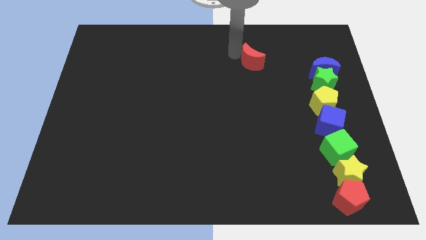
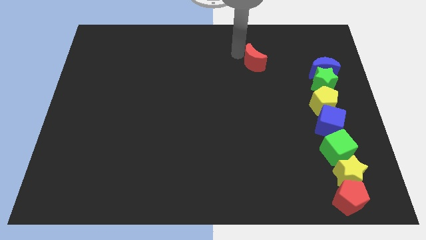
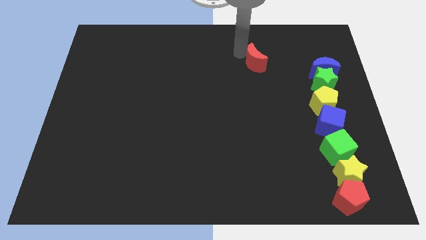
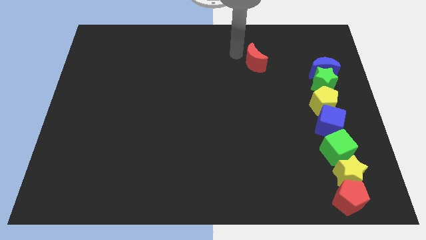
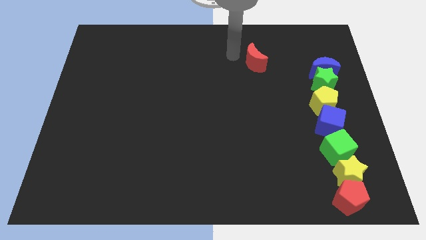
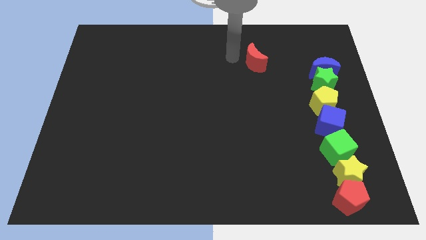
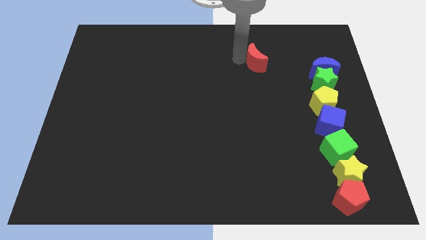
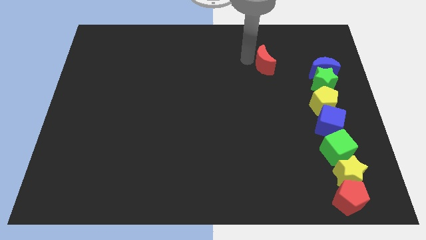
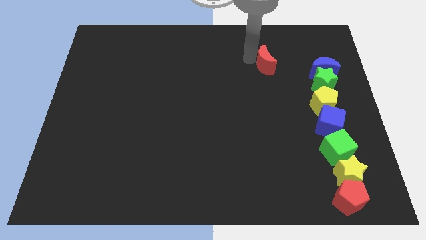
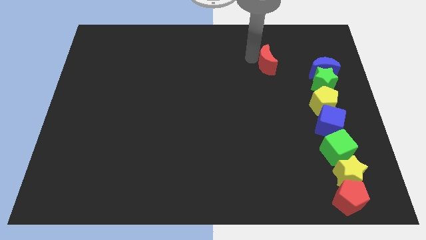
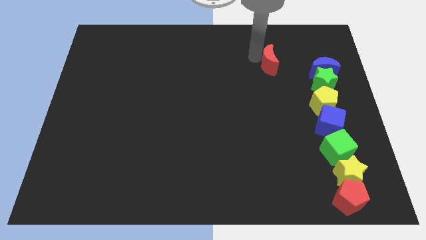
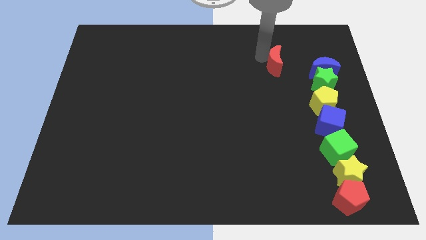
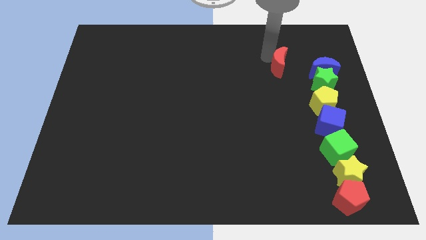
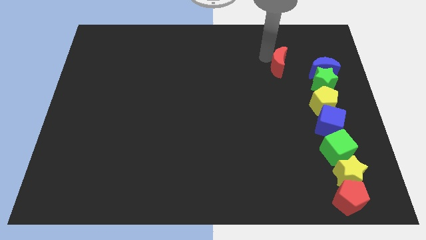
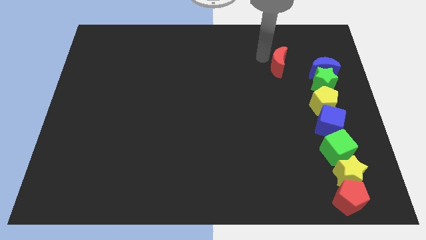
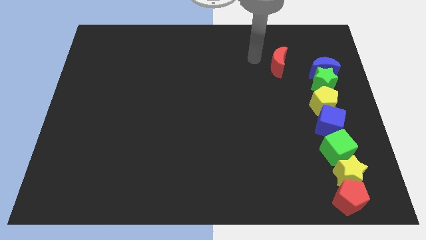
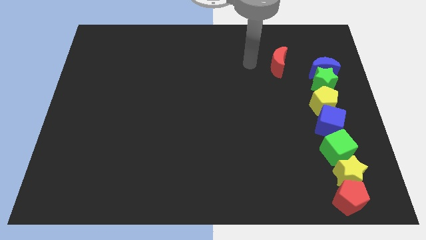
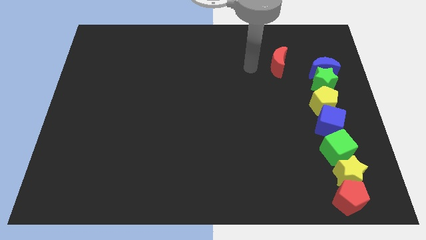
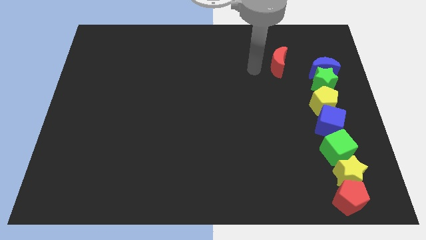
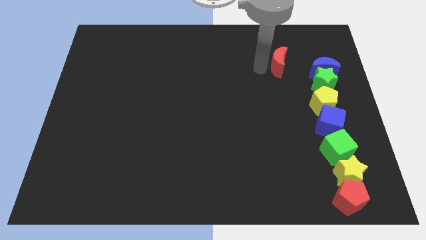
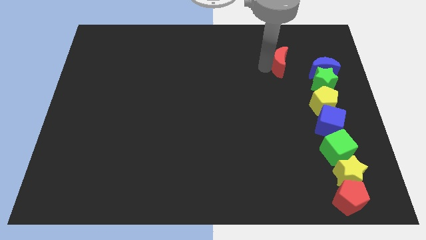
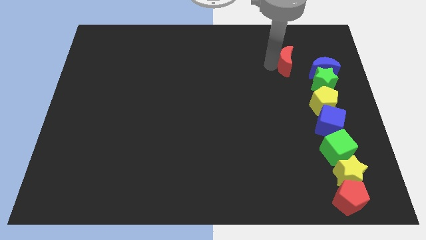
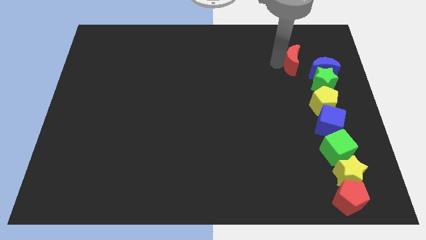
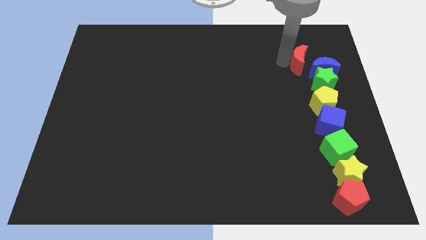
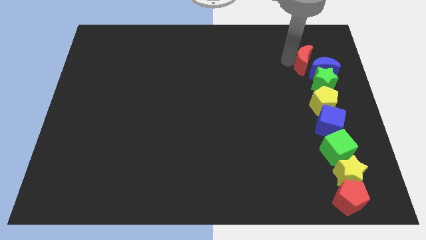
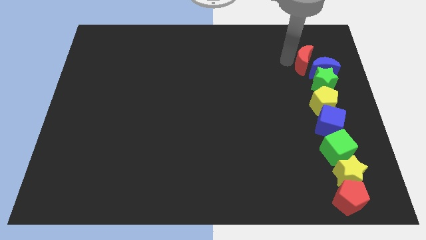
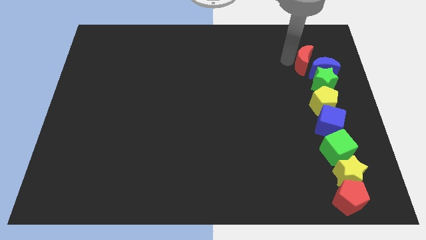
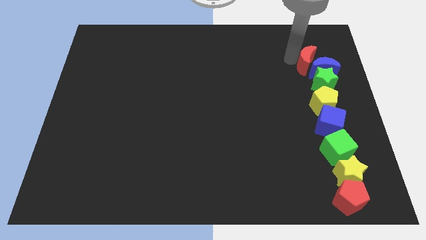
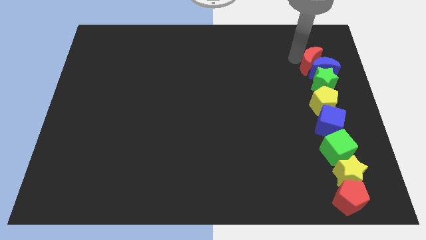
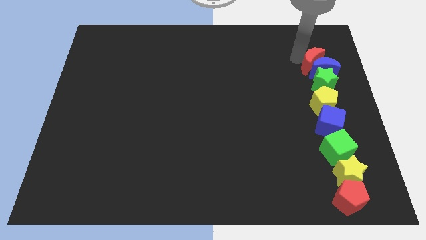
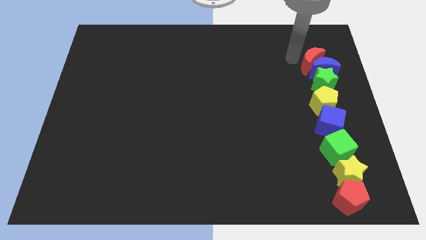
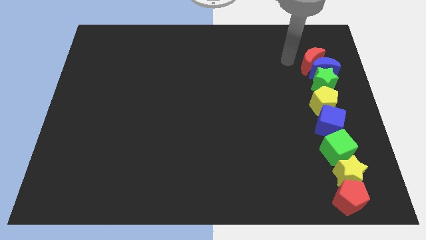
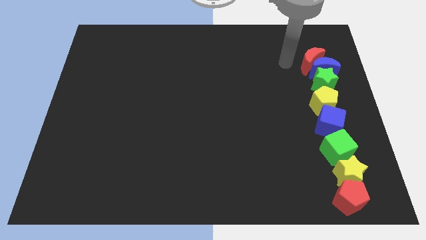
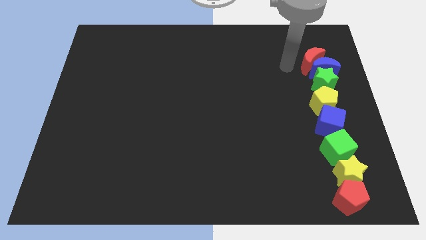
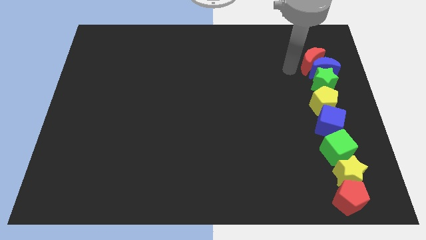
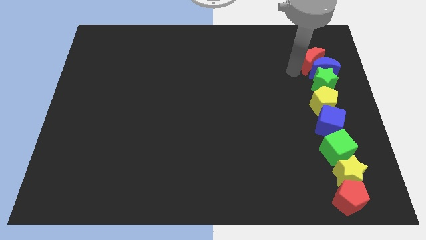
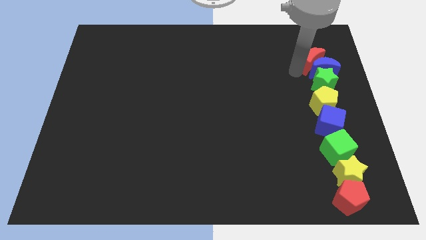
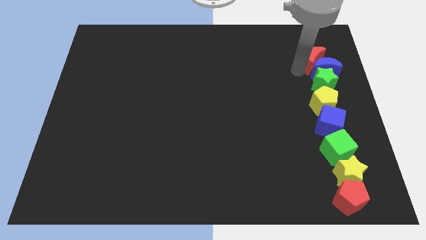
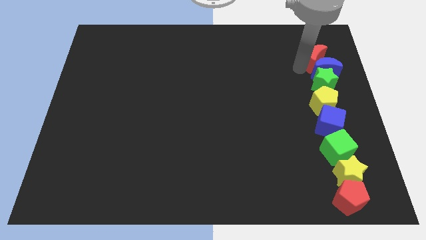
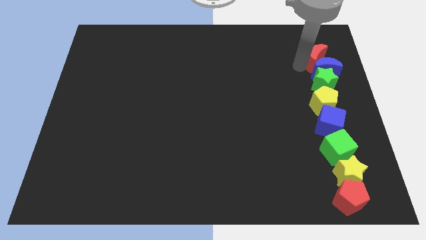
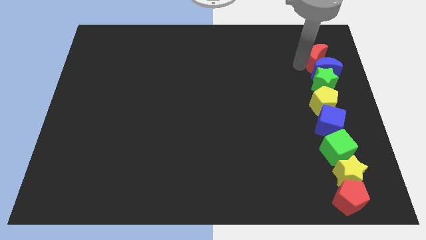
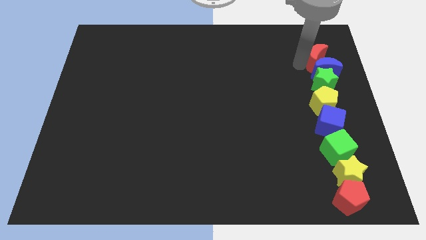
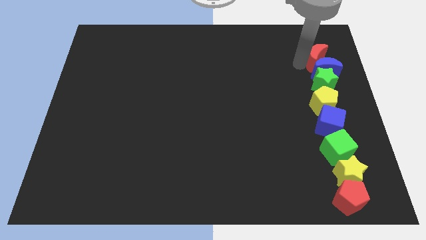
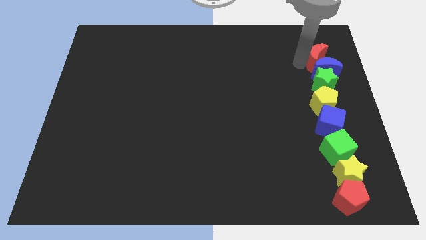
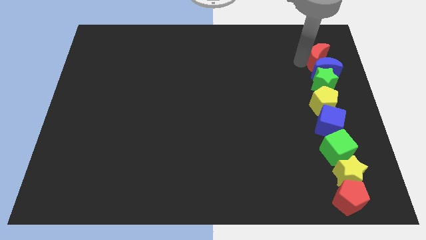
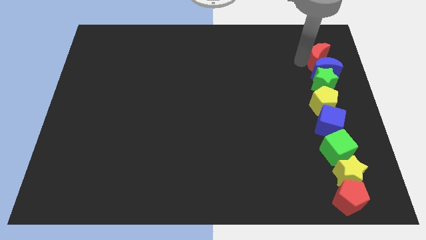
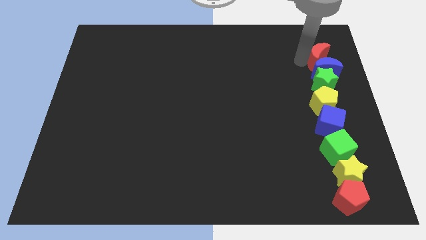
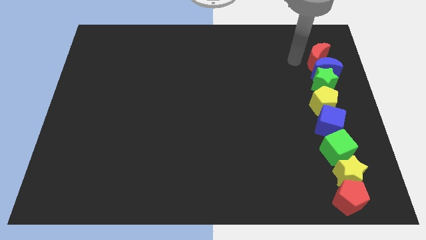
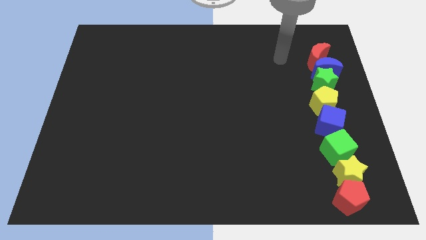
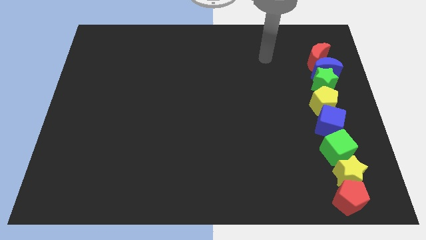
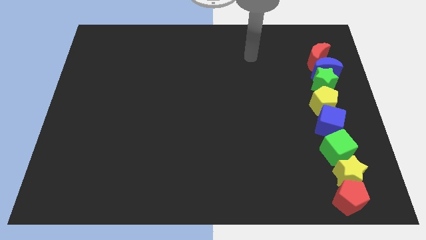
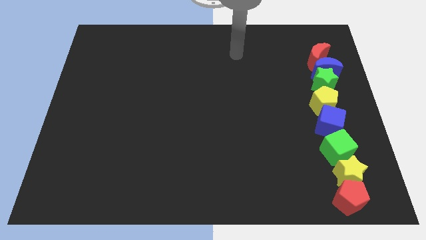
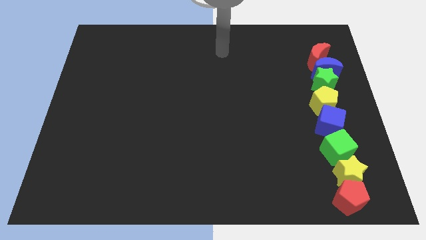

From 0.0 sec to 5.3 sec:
adjust the red crescent to form a vertical line

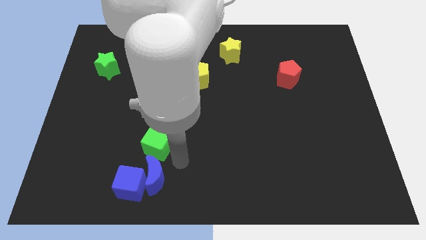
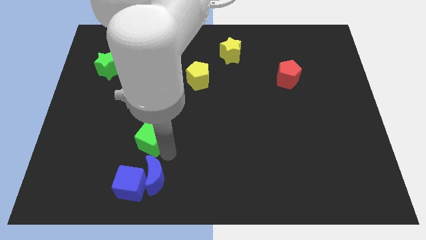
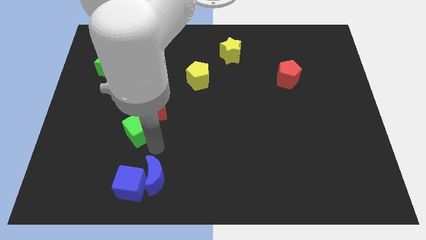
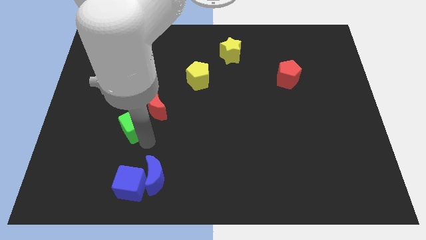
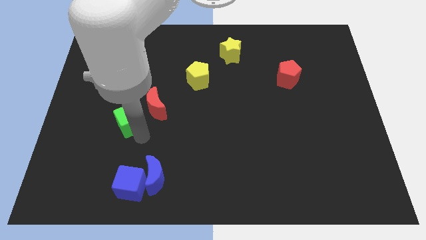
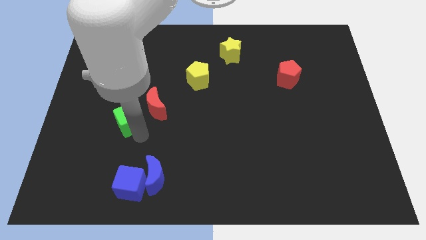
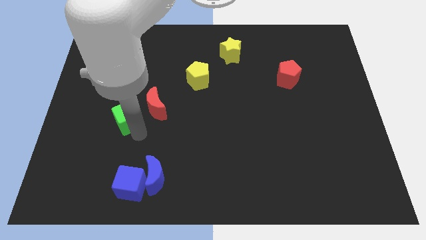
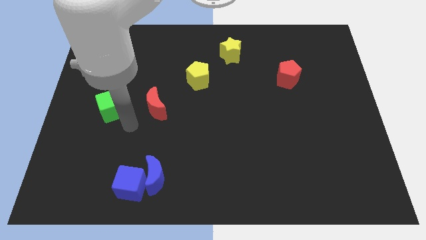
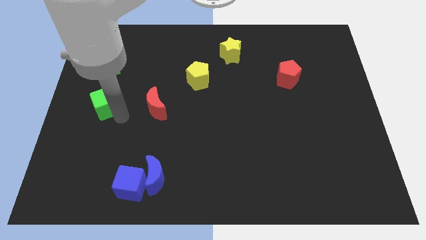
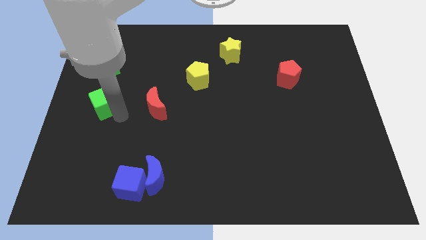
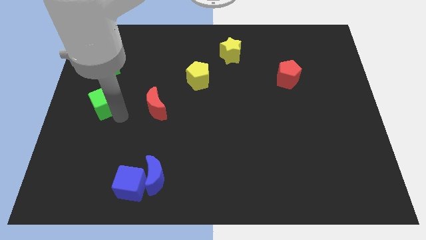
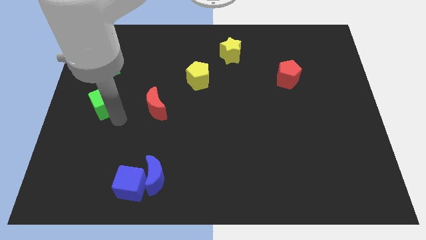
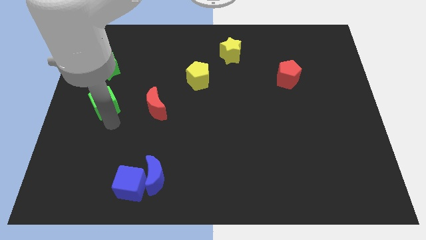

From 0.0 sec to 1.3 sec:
move the green cube to the bottom of the green star

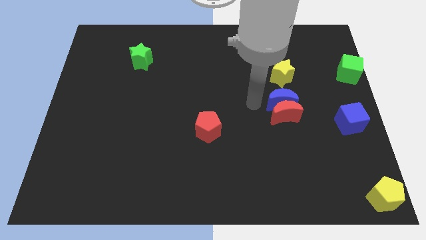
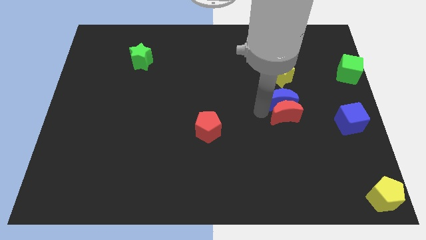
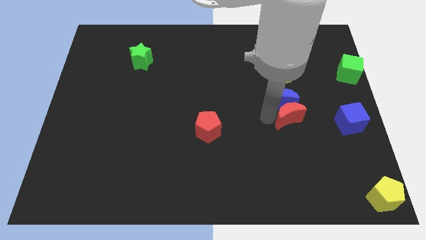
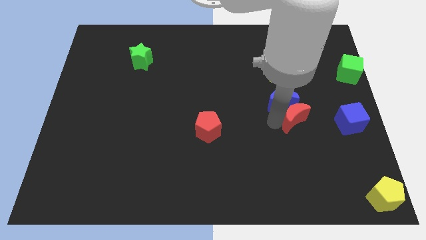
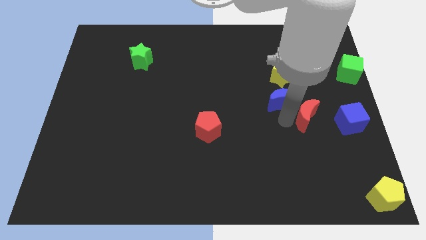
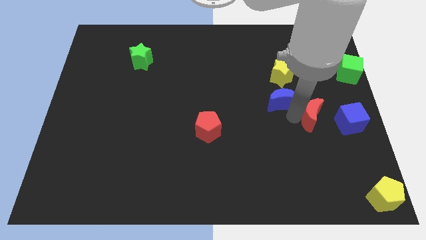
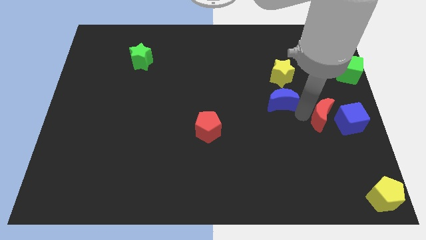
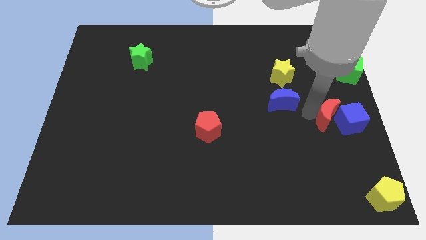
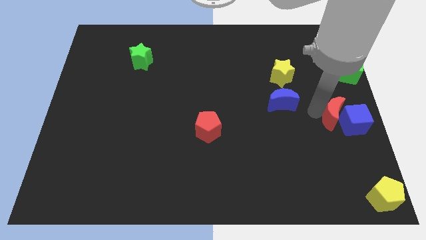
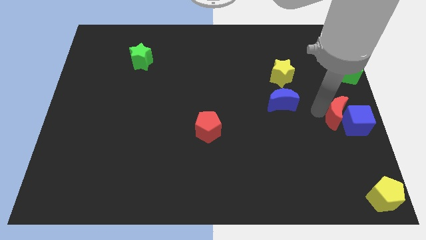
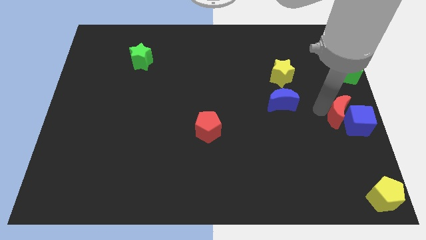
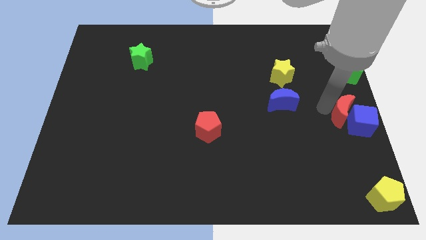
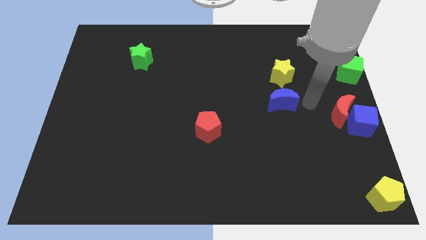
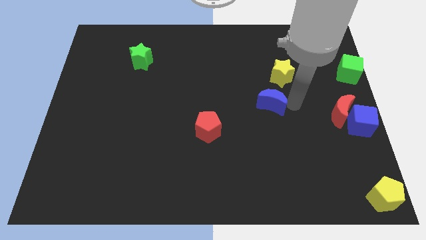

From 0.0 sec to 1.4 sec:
move the red moon to the top left of the blue cube

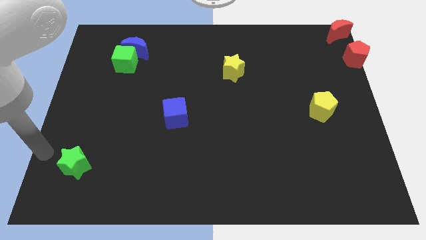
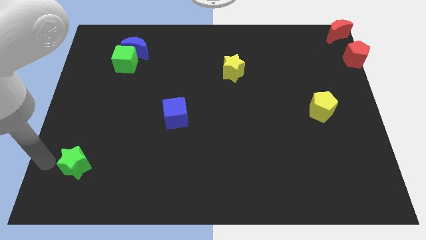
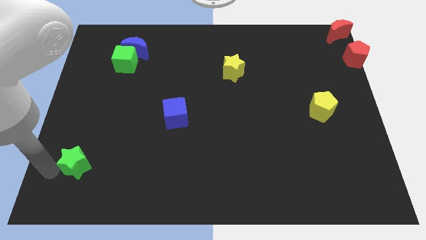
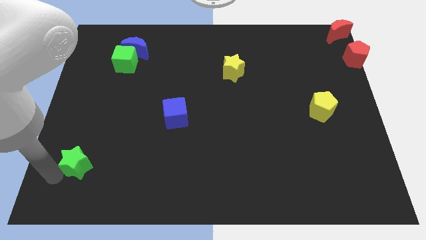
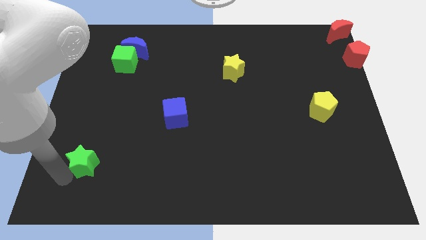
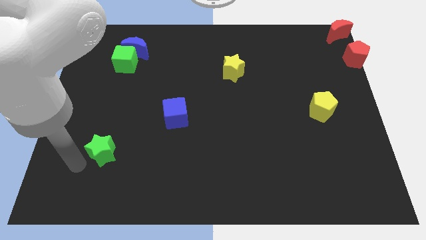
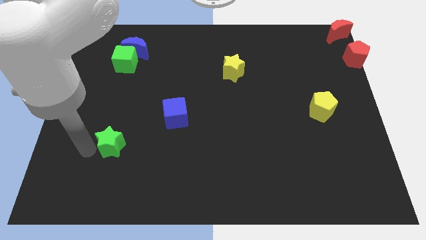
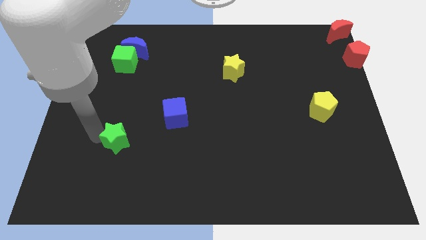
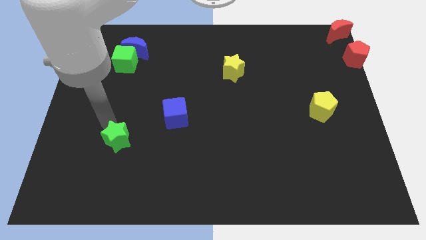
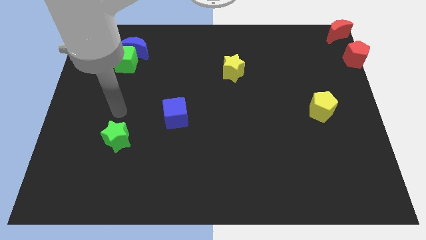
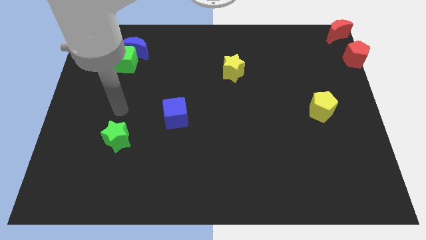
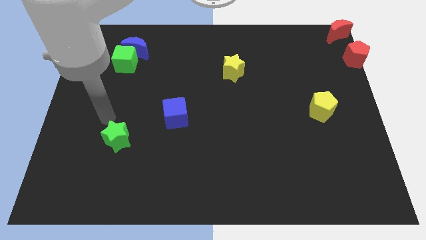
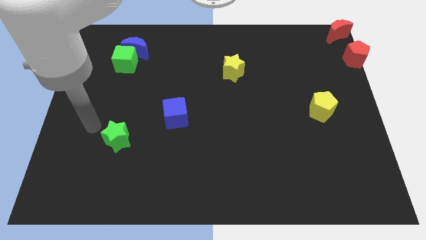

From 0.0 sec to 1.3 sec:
push the green star towards the blue cube
